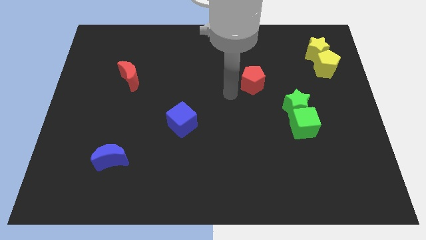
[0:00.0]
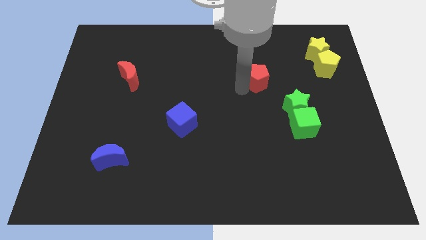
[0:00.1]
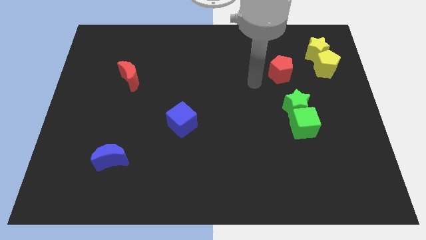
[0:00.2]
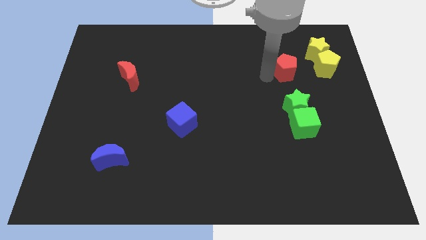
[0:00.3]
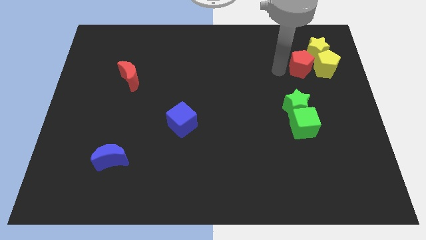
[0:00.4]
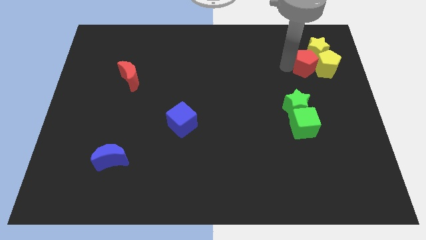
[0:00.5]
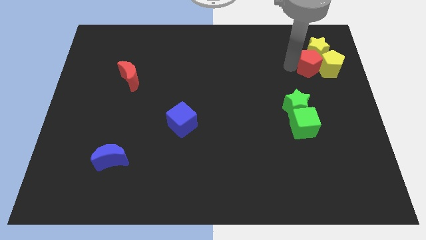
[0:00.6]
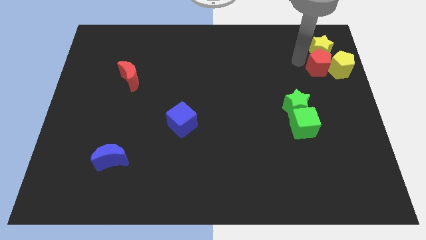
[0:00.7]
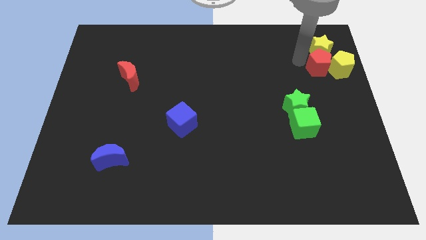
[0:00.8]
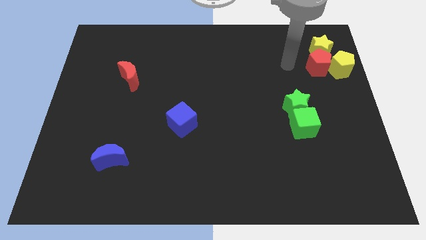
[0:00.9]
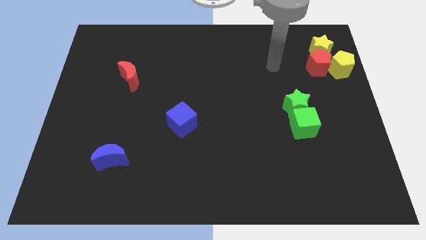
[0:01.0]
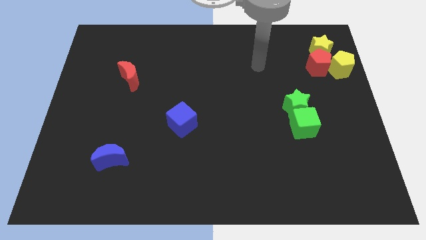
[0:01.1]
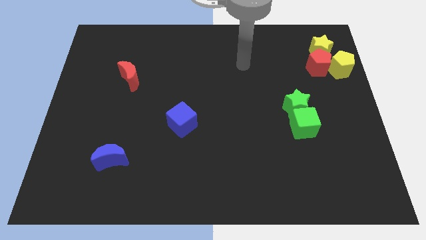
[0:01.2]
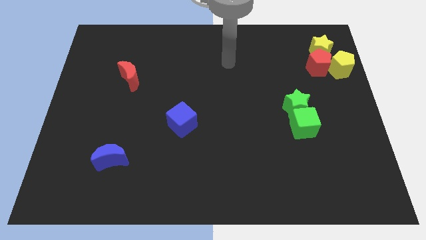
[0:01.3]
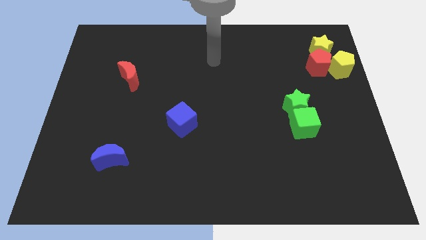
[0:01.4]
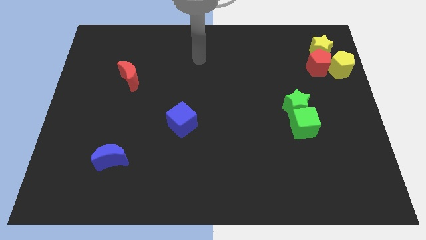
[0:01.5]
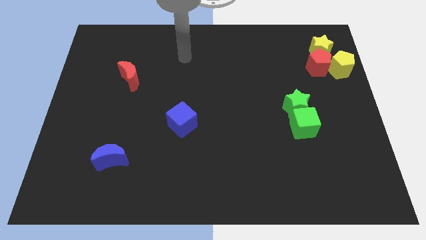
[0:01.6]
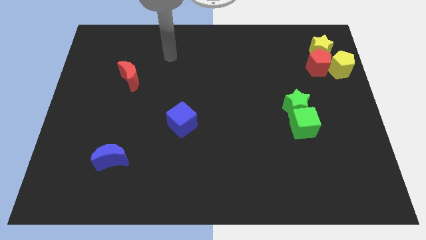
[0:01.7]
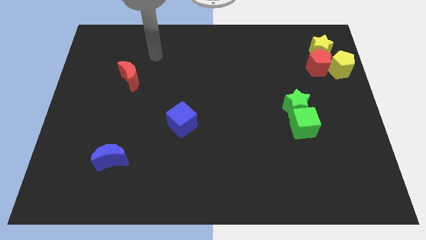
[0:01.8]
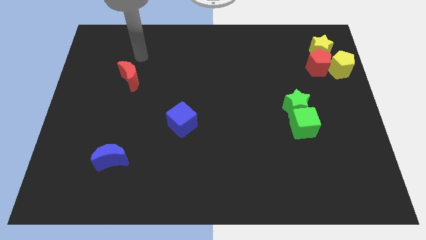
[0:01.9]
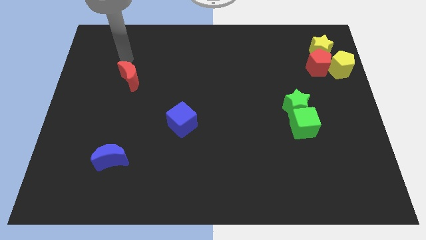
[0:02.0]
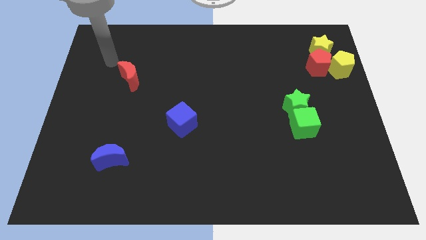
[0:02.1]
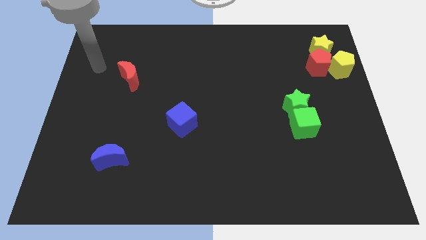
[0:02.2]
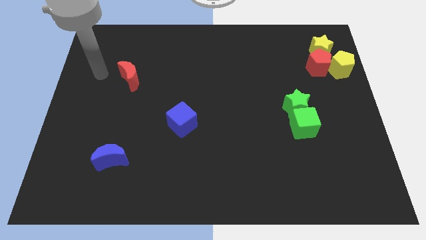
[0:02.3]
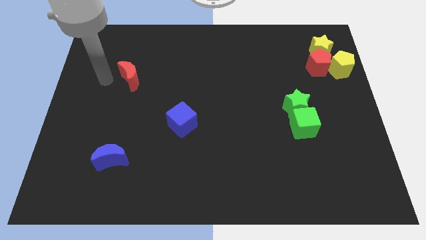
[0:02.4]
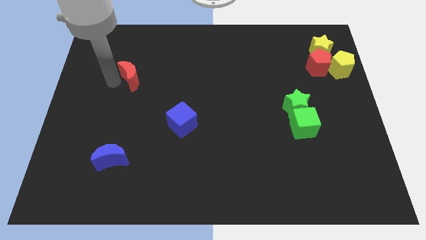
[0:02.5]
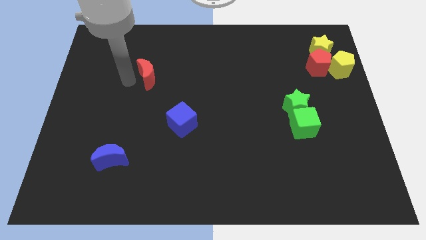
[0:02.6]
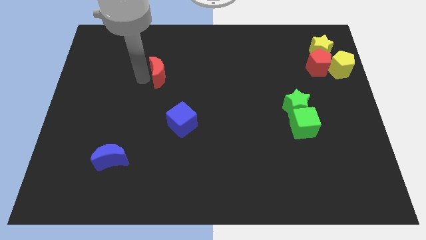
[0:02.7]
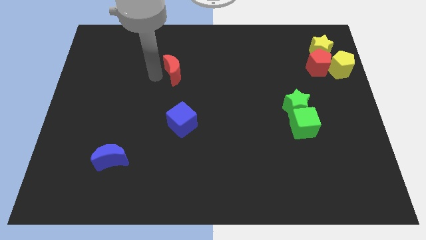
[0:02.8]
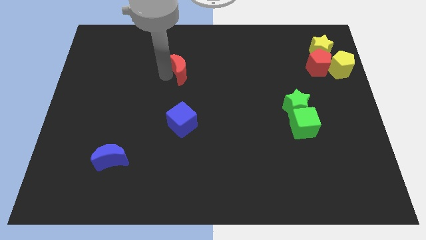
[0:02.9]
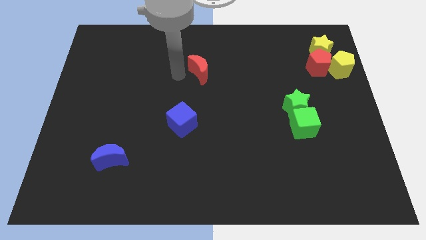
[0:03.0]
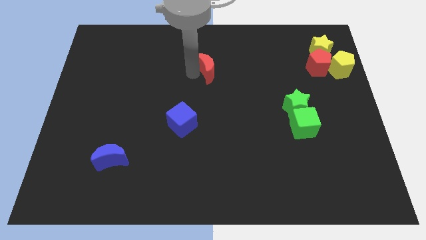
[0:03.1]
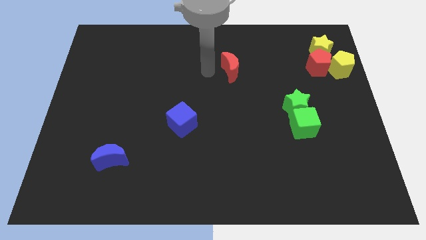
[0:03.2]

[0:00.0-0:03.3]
separate the yellow star and the yellow pentagon

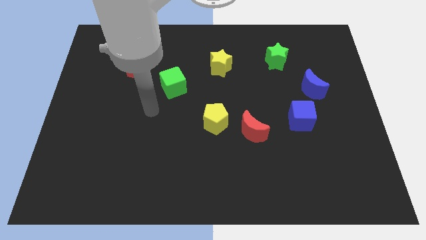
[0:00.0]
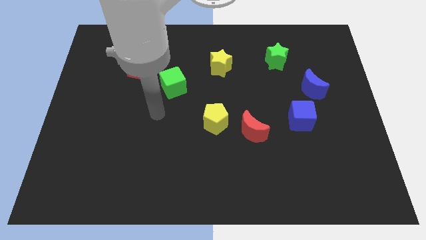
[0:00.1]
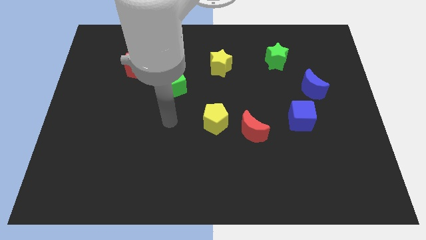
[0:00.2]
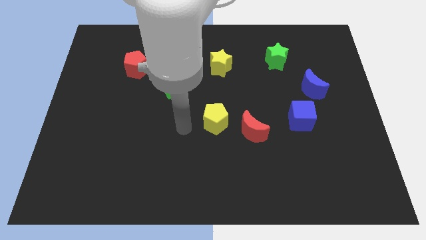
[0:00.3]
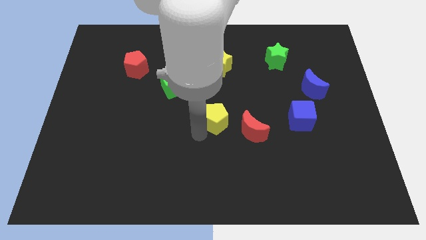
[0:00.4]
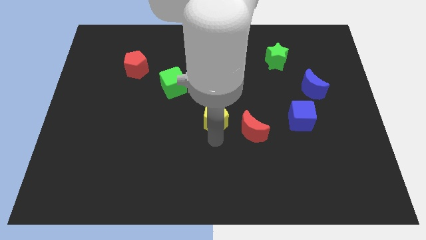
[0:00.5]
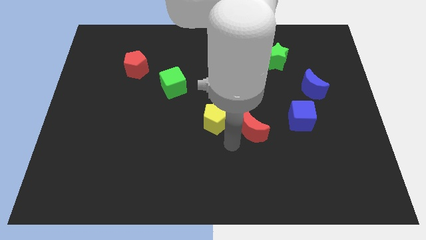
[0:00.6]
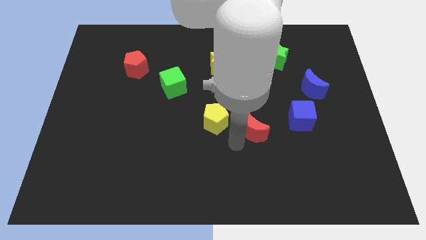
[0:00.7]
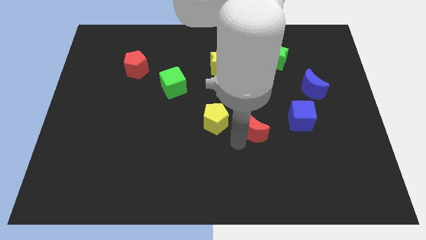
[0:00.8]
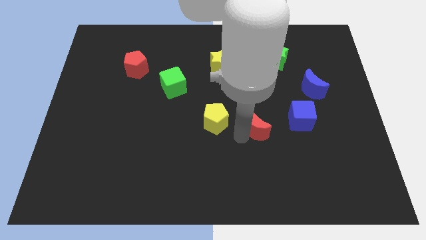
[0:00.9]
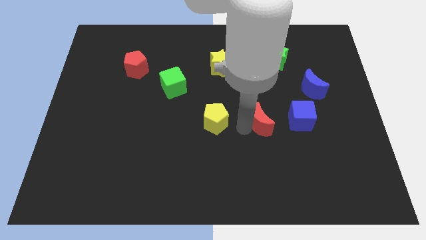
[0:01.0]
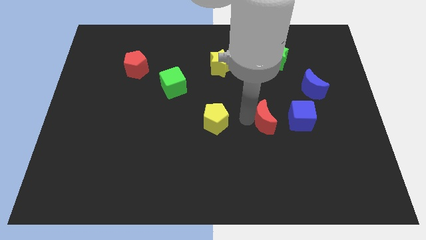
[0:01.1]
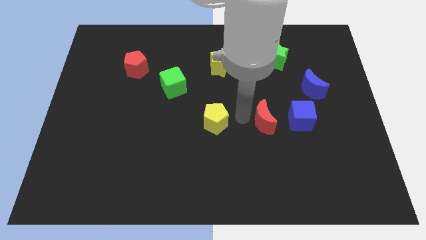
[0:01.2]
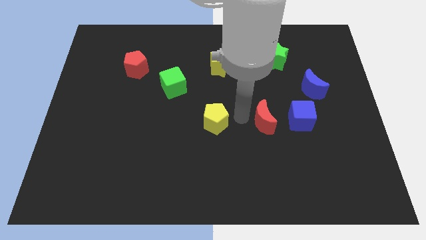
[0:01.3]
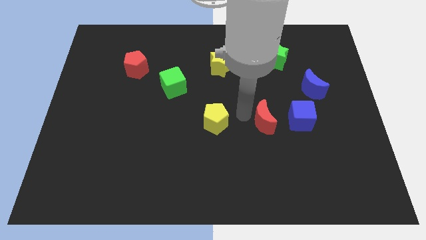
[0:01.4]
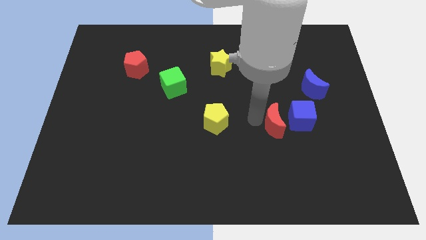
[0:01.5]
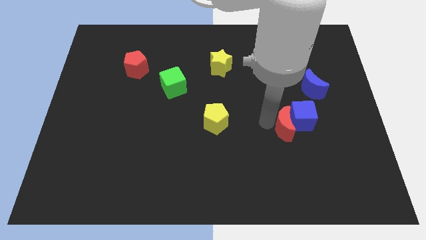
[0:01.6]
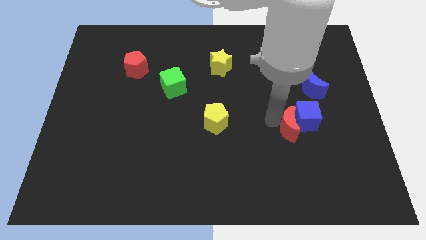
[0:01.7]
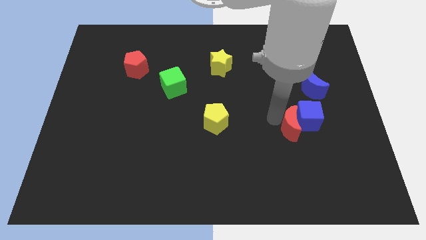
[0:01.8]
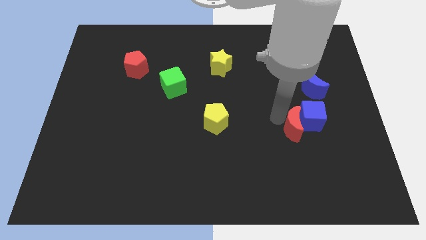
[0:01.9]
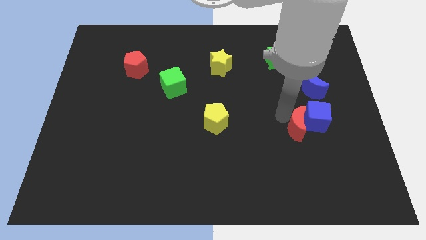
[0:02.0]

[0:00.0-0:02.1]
put the red moon into the blue cube

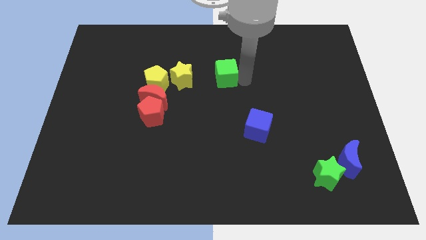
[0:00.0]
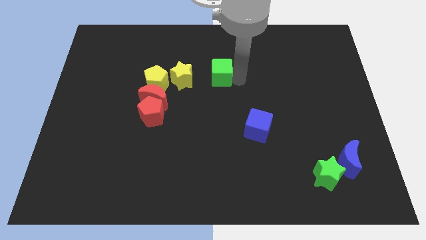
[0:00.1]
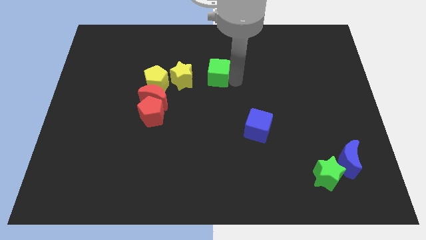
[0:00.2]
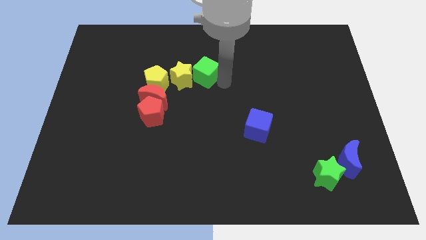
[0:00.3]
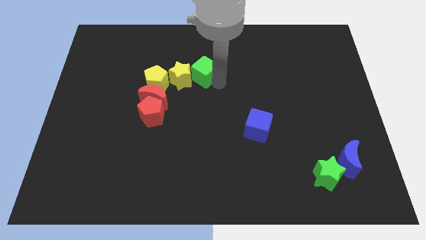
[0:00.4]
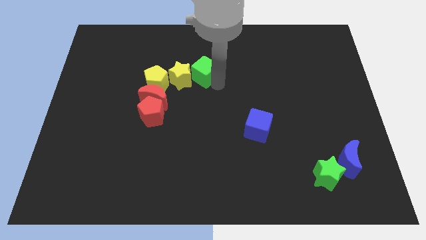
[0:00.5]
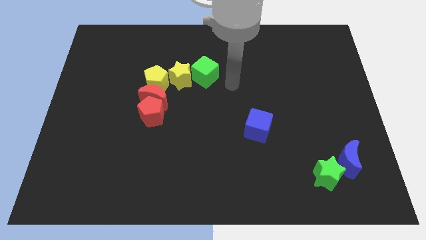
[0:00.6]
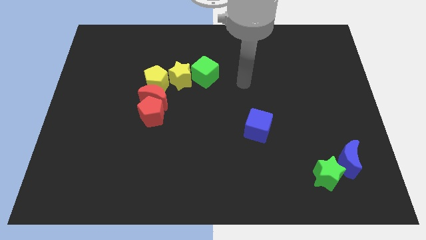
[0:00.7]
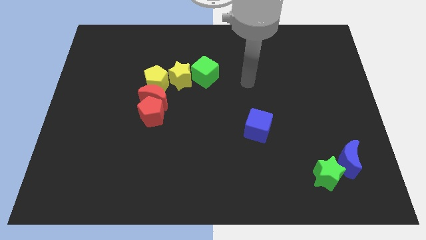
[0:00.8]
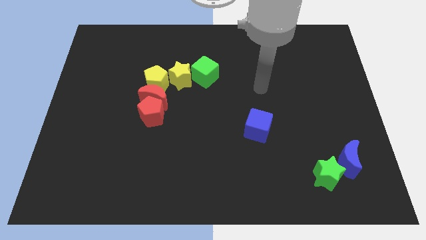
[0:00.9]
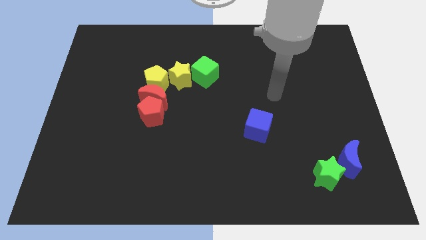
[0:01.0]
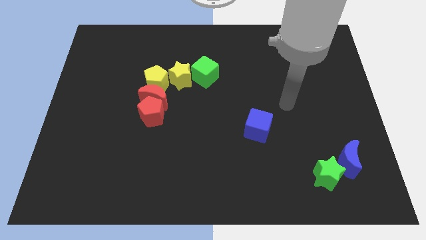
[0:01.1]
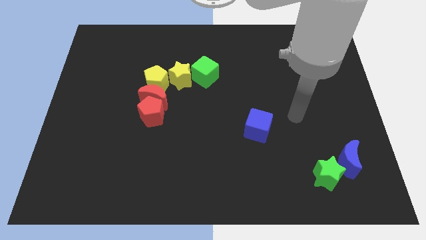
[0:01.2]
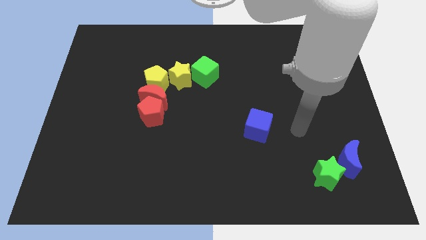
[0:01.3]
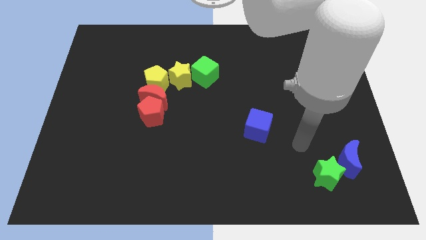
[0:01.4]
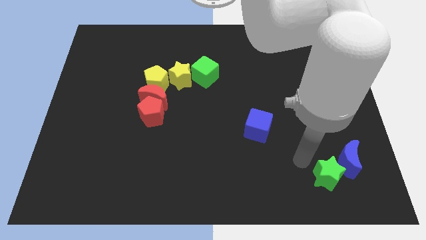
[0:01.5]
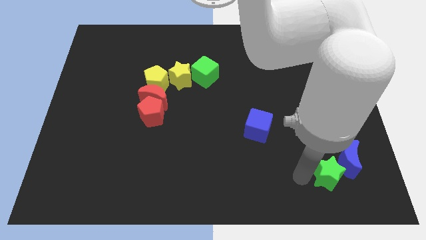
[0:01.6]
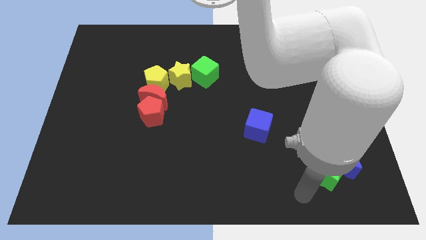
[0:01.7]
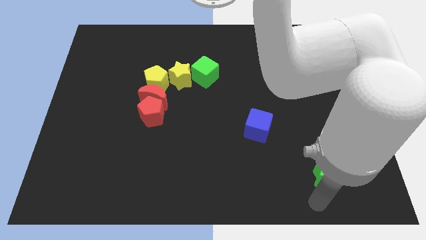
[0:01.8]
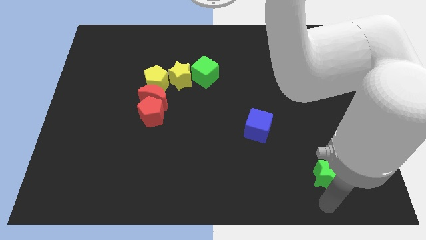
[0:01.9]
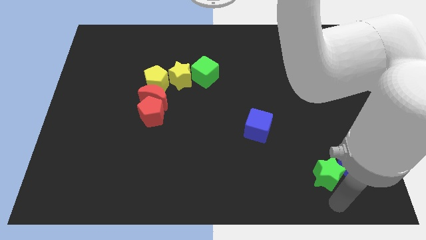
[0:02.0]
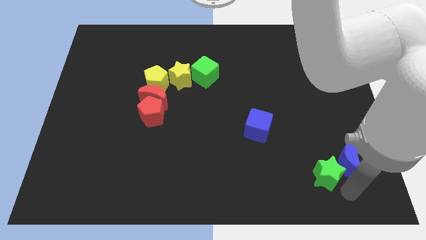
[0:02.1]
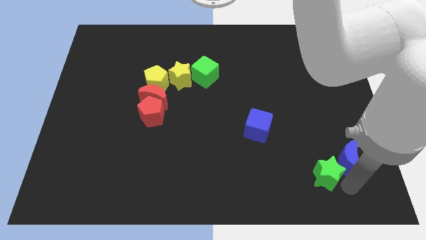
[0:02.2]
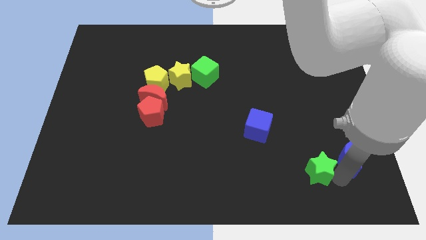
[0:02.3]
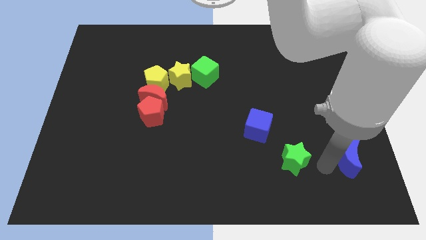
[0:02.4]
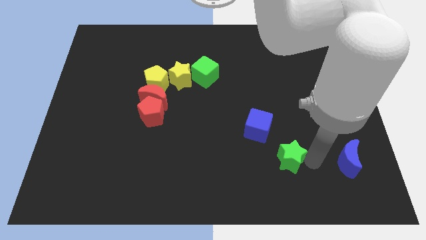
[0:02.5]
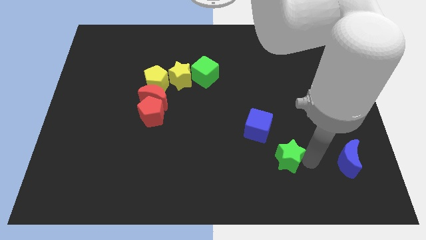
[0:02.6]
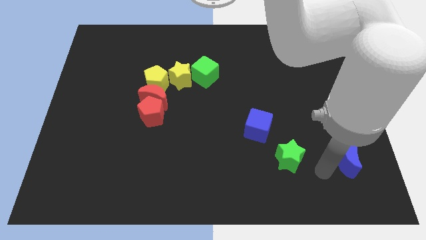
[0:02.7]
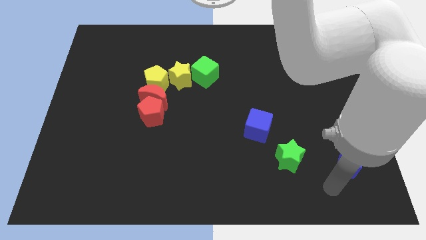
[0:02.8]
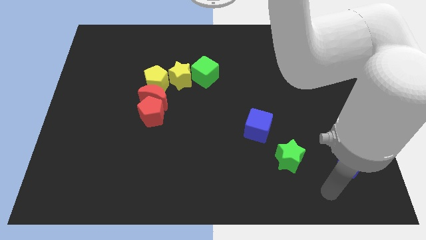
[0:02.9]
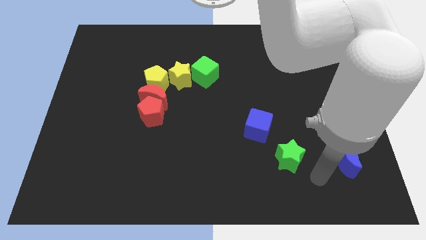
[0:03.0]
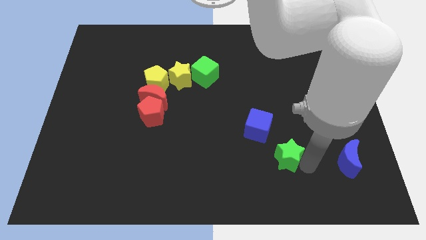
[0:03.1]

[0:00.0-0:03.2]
slightly push green star diagonal to the blue cube

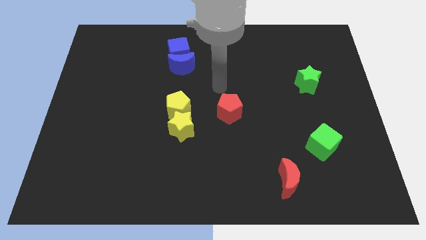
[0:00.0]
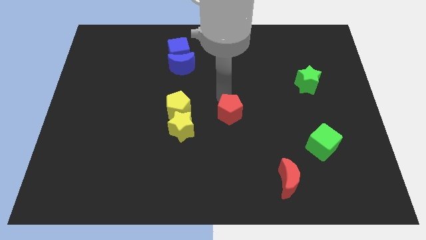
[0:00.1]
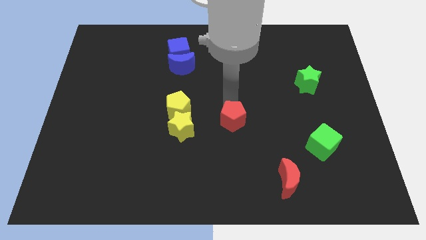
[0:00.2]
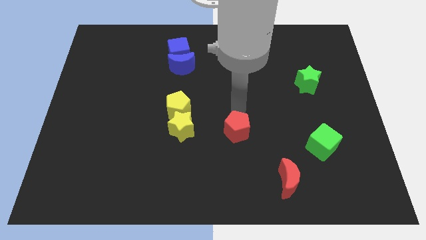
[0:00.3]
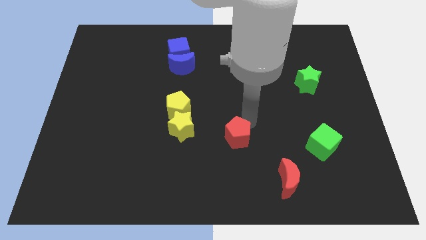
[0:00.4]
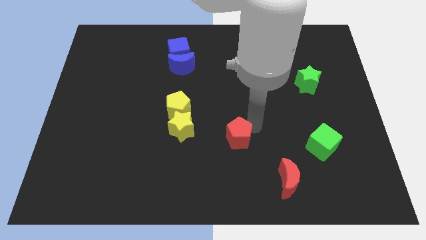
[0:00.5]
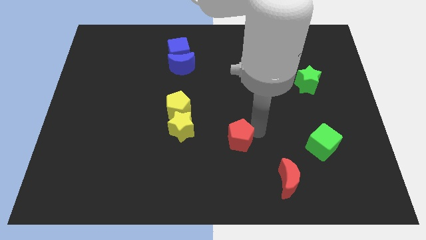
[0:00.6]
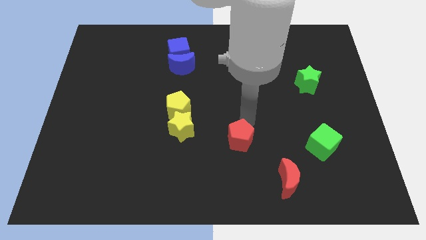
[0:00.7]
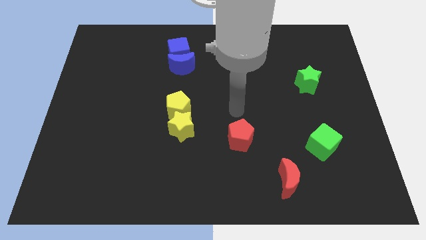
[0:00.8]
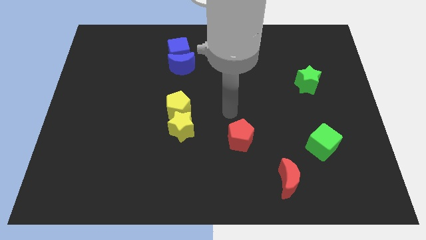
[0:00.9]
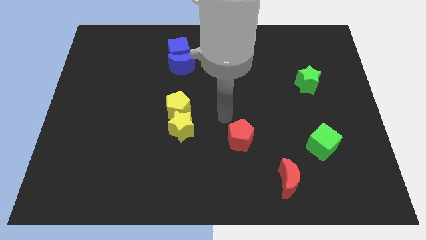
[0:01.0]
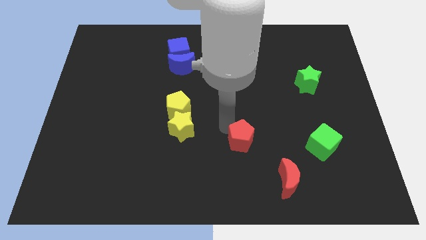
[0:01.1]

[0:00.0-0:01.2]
move the red pentagon to the bottom of the board
